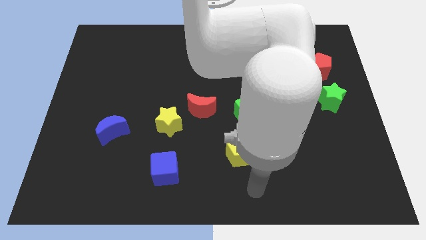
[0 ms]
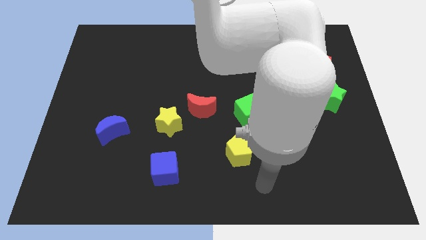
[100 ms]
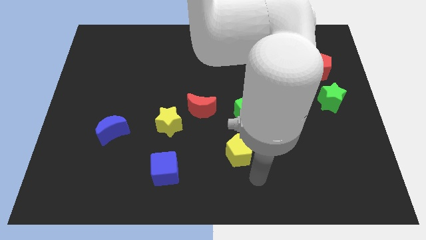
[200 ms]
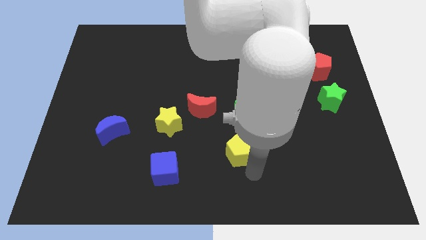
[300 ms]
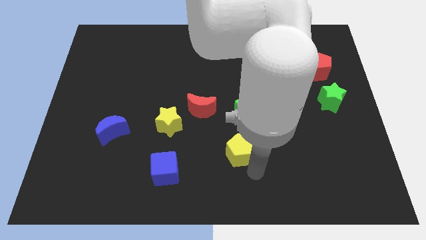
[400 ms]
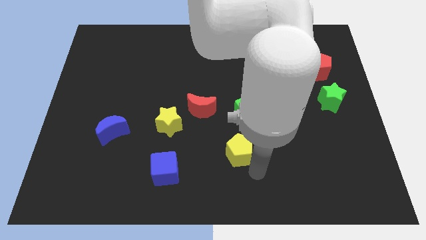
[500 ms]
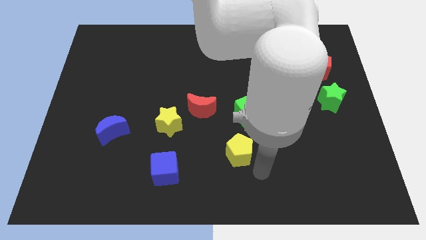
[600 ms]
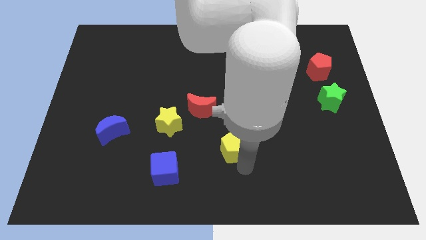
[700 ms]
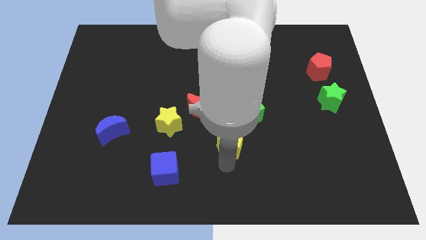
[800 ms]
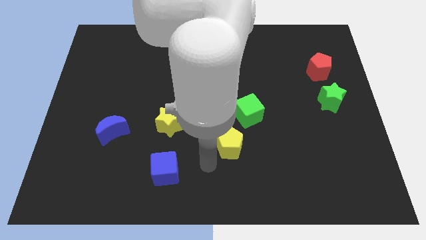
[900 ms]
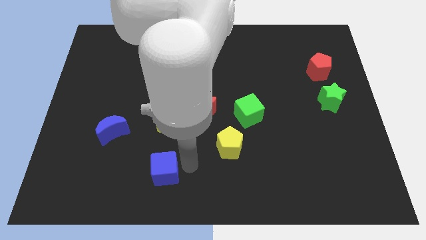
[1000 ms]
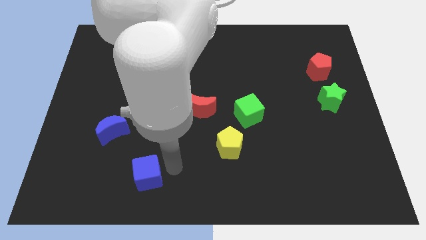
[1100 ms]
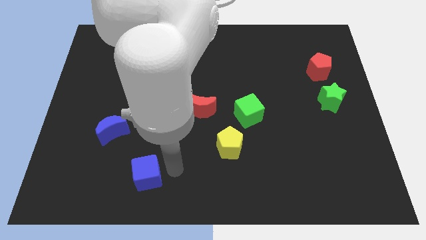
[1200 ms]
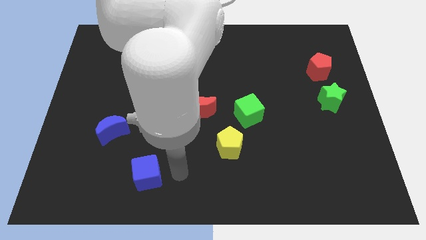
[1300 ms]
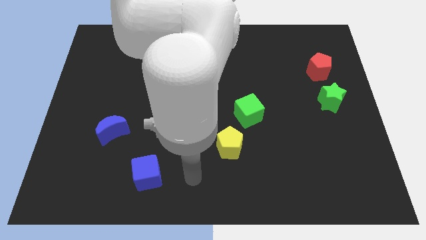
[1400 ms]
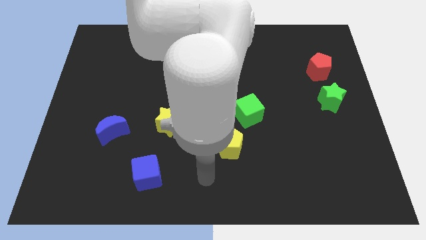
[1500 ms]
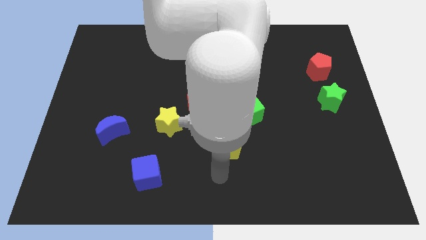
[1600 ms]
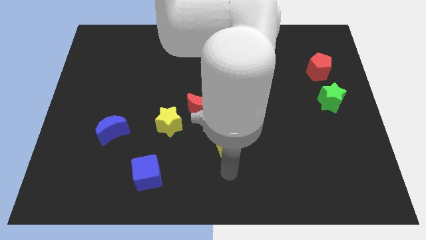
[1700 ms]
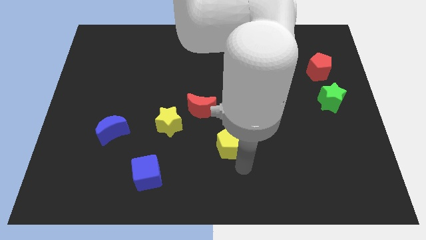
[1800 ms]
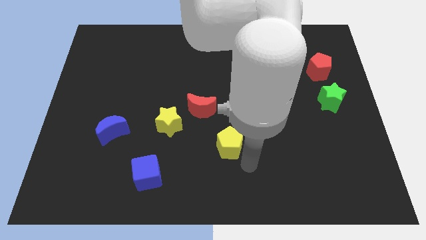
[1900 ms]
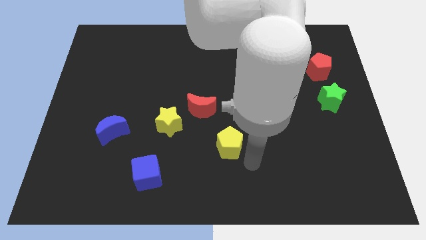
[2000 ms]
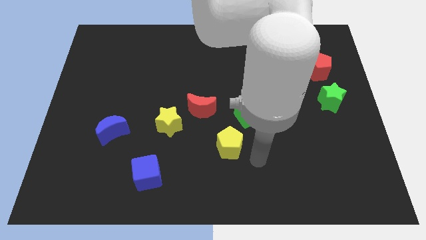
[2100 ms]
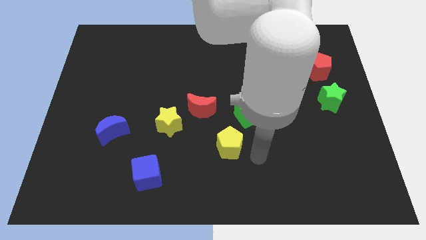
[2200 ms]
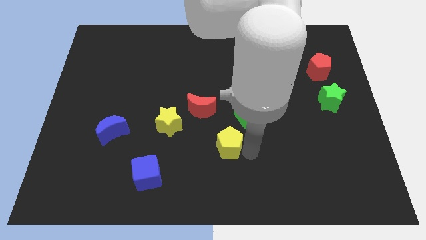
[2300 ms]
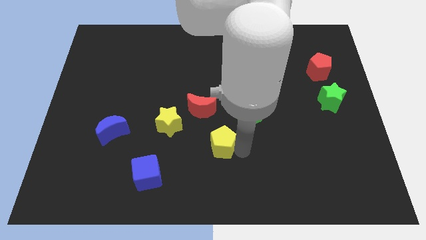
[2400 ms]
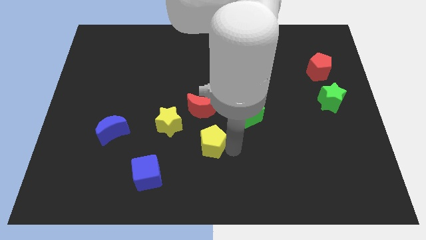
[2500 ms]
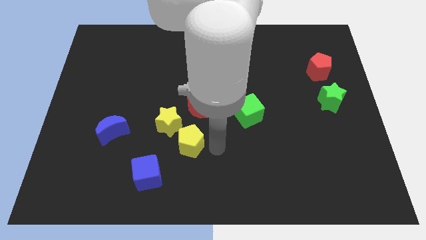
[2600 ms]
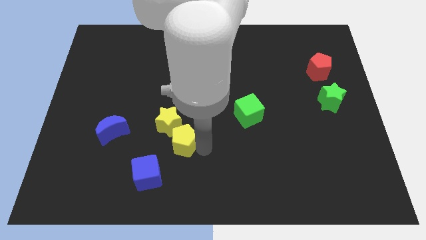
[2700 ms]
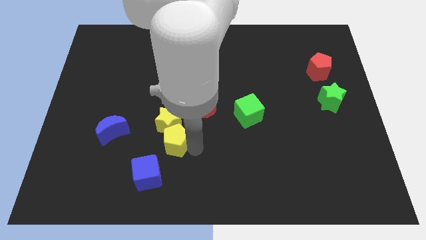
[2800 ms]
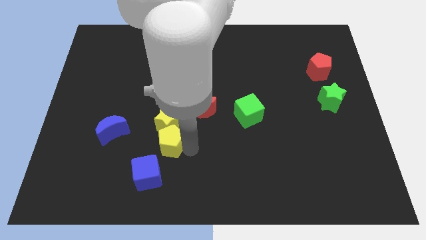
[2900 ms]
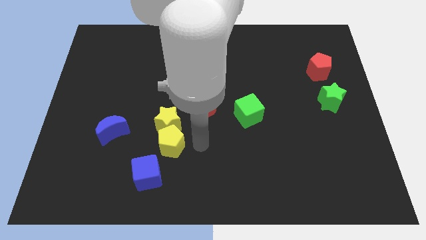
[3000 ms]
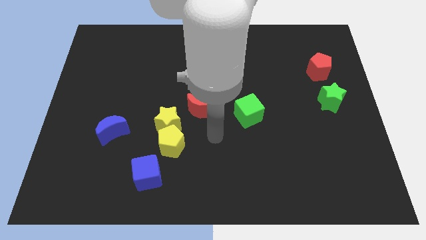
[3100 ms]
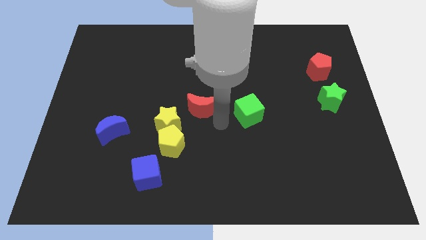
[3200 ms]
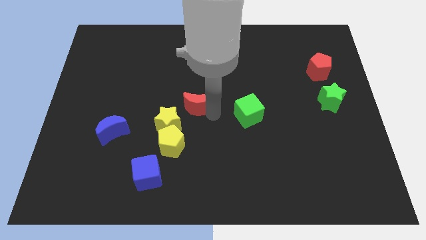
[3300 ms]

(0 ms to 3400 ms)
group up the yellow blocks

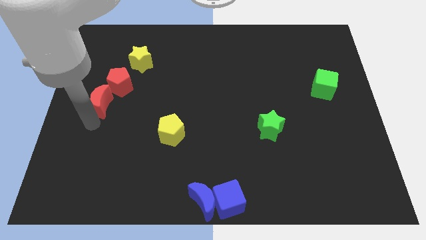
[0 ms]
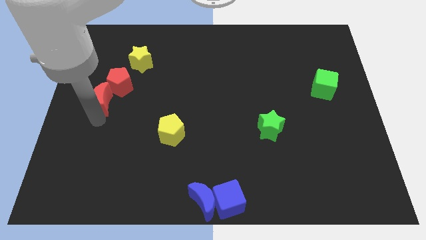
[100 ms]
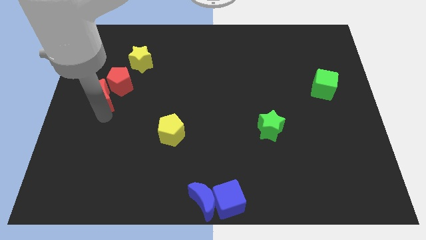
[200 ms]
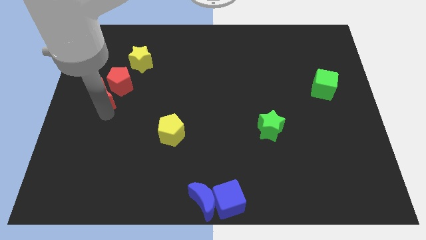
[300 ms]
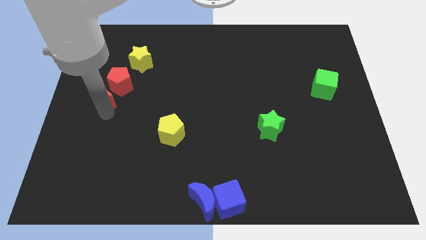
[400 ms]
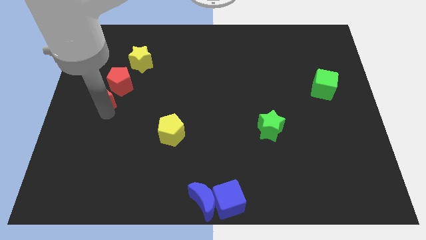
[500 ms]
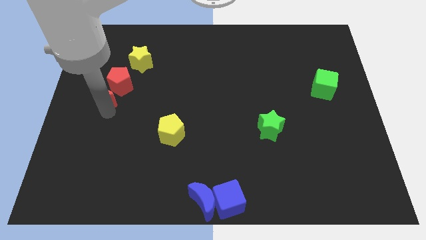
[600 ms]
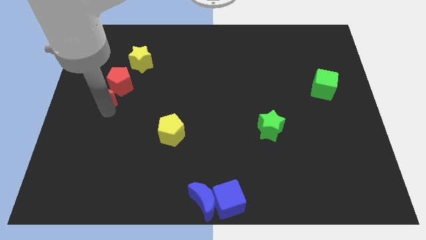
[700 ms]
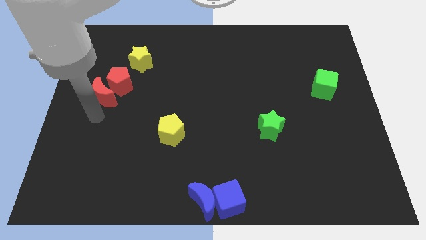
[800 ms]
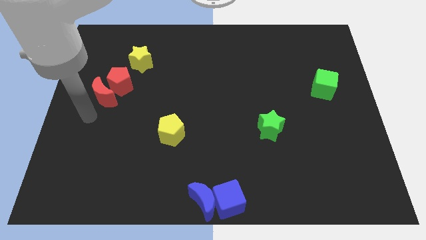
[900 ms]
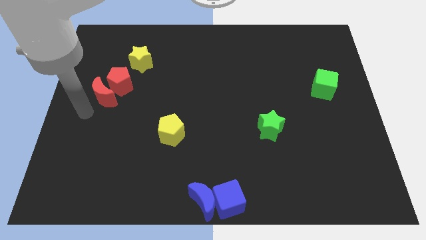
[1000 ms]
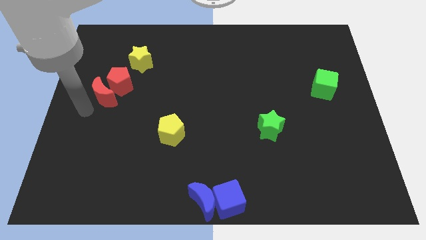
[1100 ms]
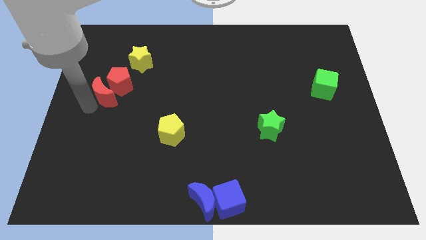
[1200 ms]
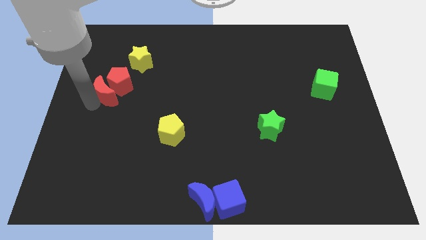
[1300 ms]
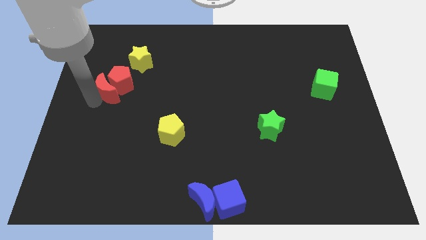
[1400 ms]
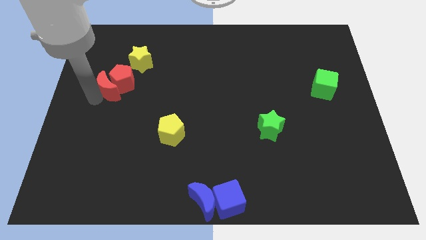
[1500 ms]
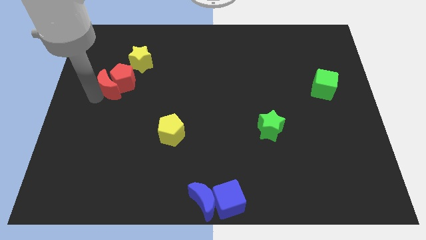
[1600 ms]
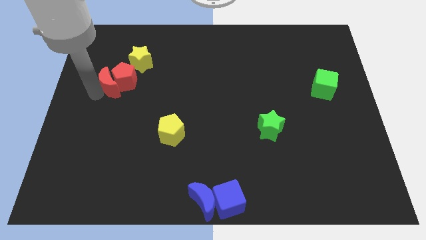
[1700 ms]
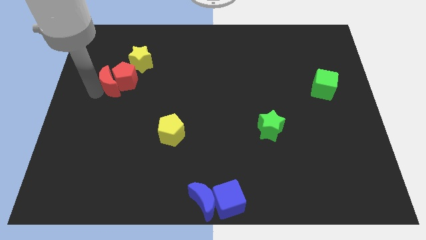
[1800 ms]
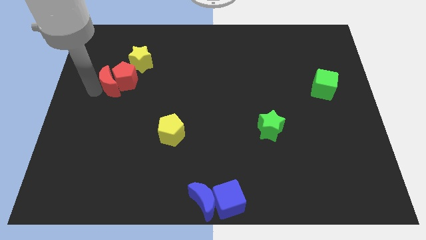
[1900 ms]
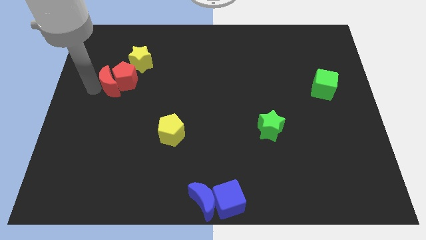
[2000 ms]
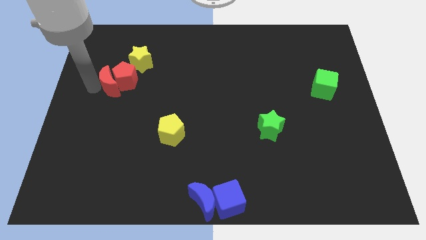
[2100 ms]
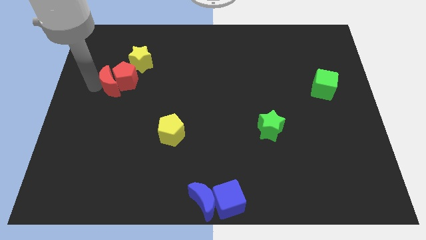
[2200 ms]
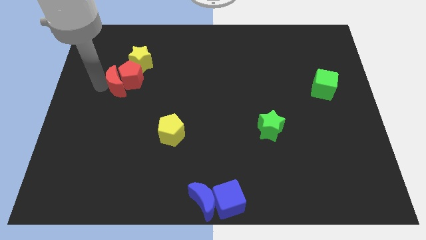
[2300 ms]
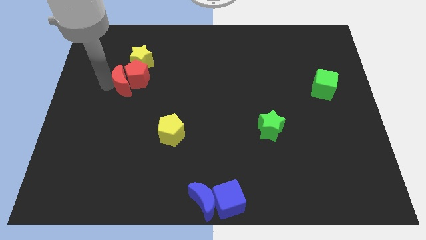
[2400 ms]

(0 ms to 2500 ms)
push red crescent along with red pentagon towards top of the board

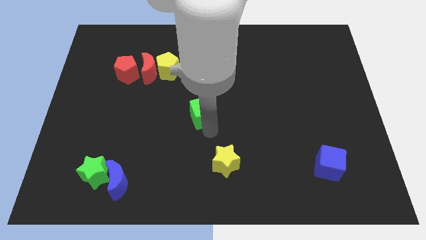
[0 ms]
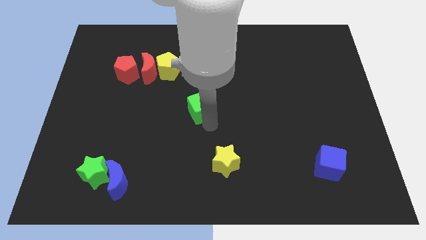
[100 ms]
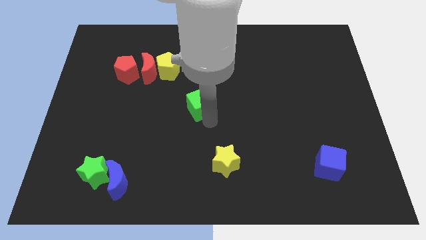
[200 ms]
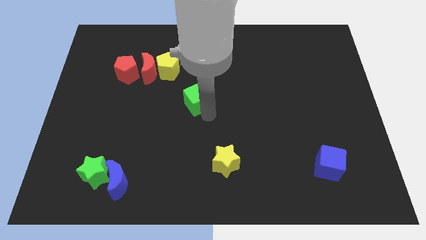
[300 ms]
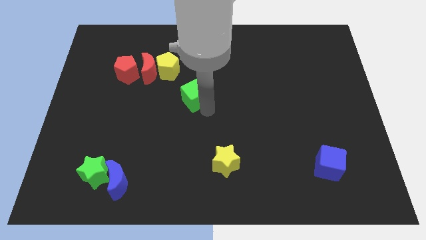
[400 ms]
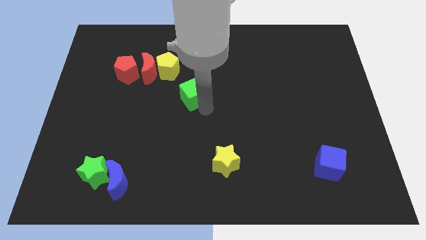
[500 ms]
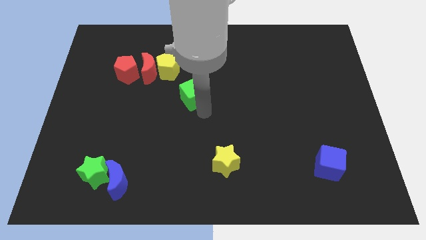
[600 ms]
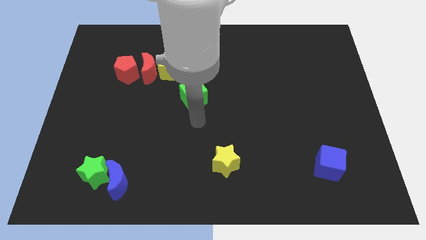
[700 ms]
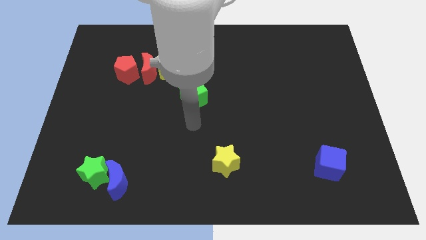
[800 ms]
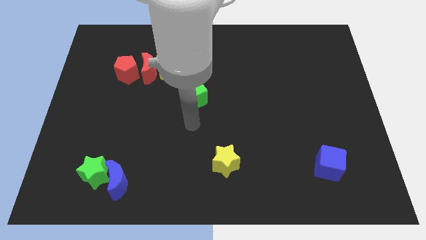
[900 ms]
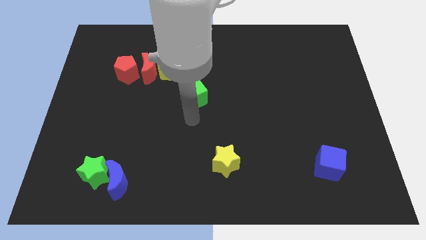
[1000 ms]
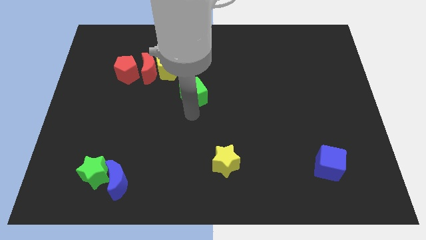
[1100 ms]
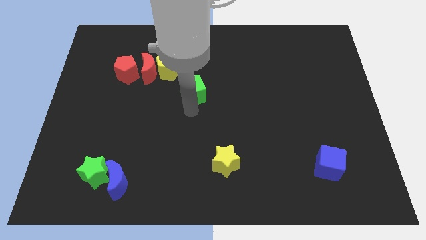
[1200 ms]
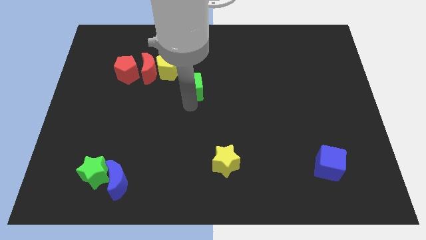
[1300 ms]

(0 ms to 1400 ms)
move the green cube towards the horizontal line of blocks

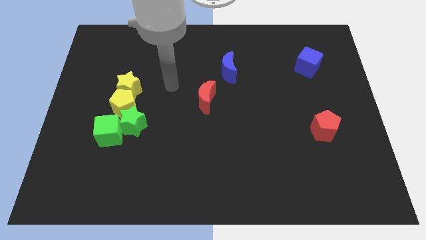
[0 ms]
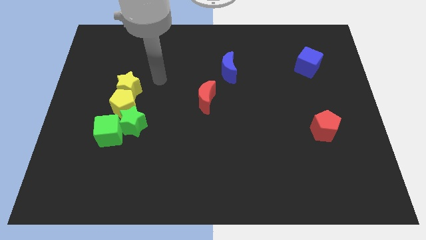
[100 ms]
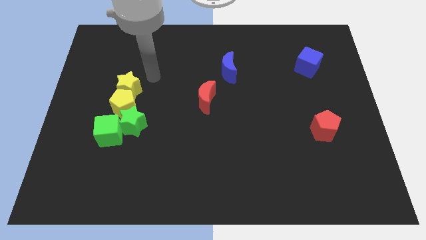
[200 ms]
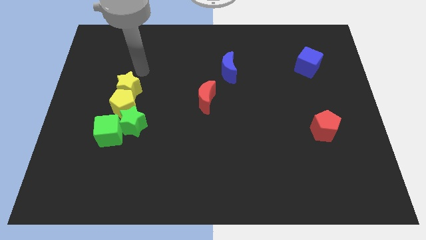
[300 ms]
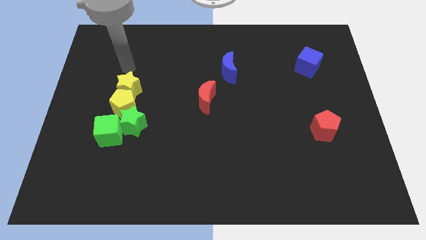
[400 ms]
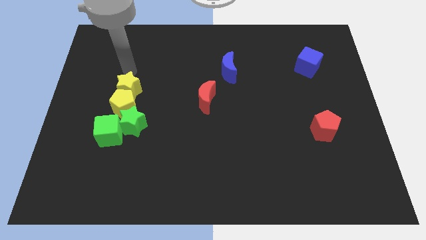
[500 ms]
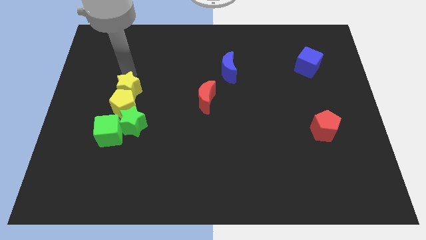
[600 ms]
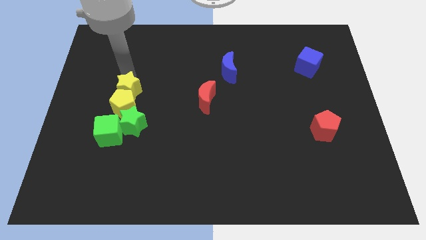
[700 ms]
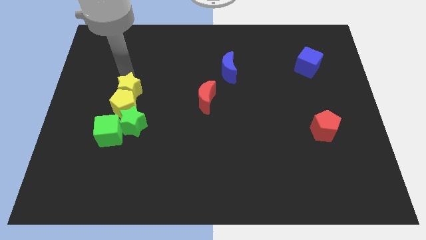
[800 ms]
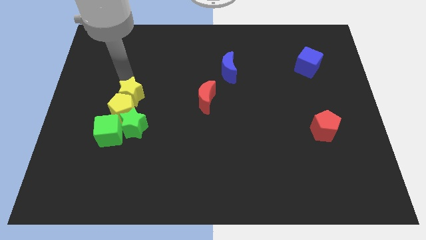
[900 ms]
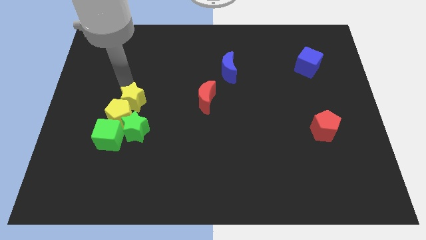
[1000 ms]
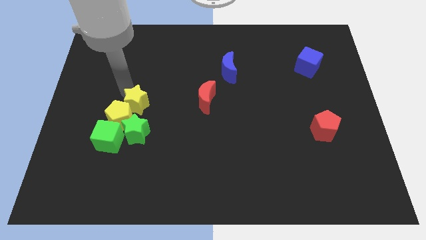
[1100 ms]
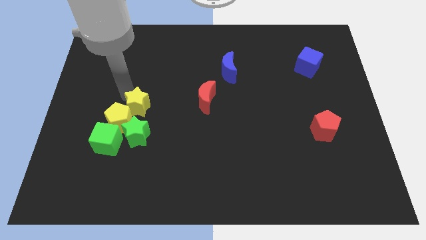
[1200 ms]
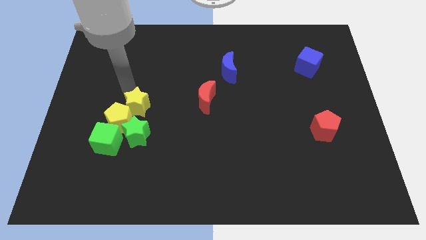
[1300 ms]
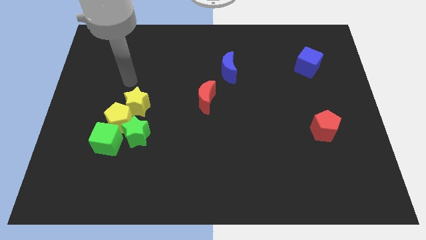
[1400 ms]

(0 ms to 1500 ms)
push the yellow star into the yellow pentagon
